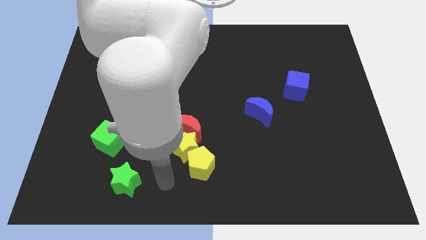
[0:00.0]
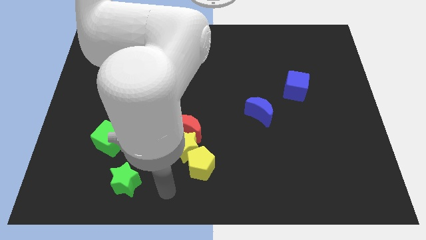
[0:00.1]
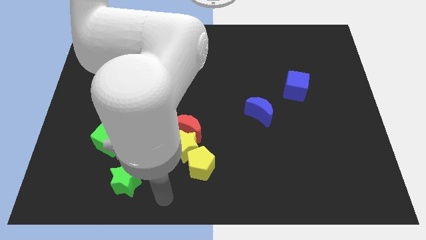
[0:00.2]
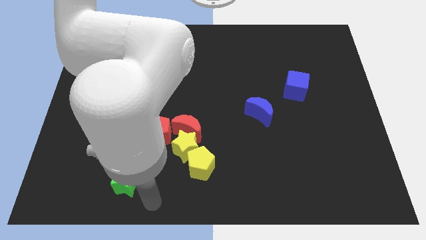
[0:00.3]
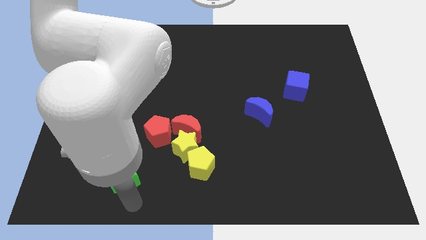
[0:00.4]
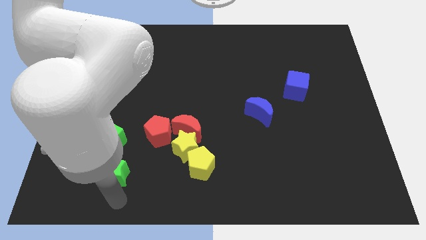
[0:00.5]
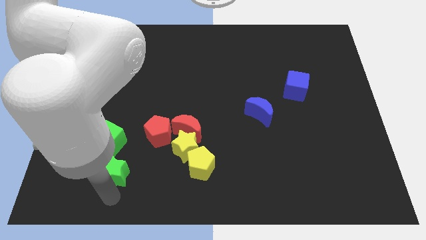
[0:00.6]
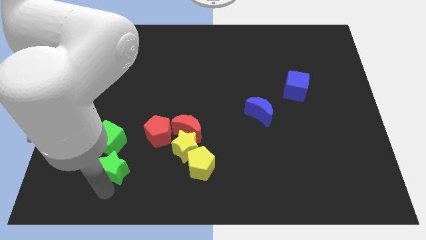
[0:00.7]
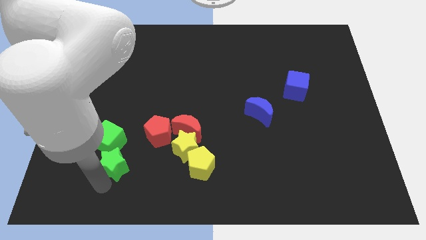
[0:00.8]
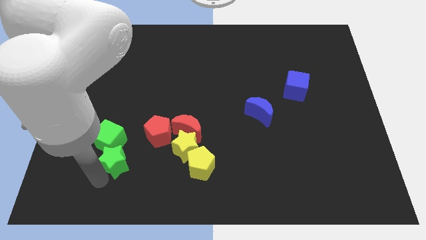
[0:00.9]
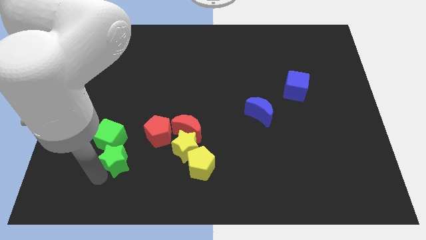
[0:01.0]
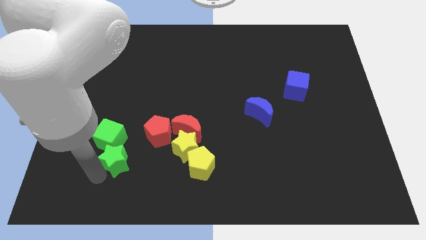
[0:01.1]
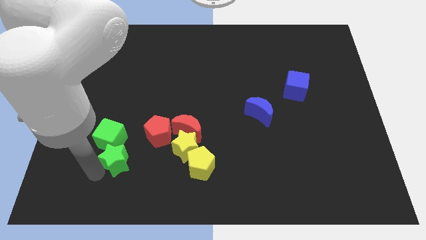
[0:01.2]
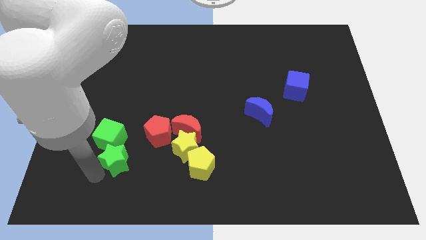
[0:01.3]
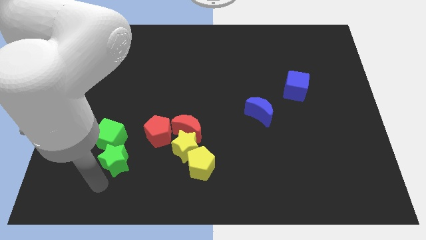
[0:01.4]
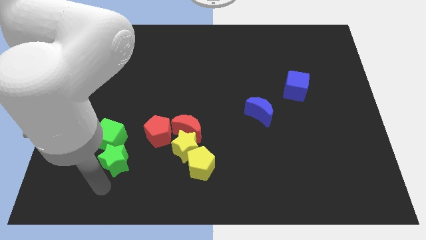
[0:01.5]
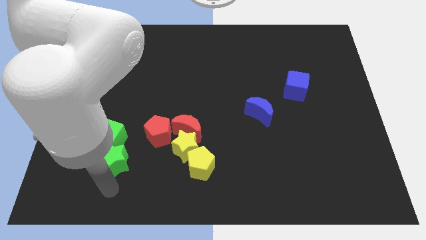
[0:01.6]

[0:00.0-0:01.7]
push the green star into the green cube

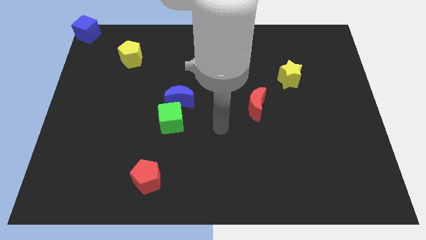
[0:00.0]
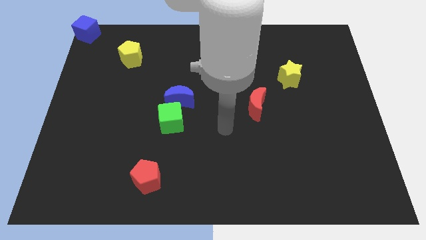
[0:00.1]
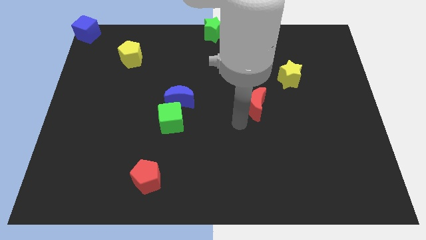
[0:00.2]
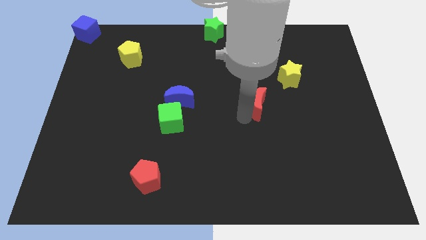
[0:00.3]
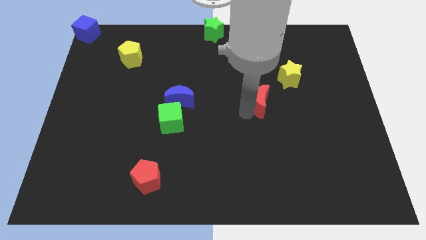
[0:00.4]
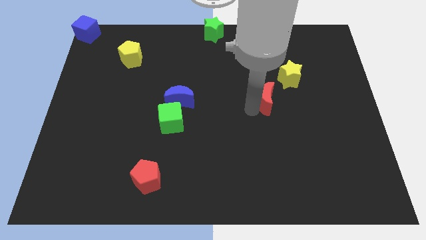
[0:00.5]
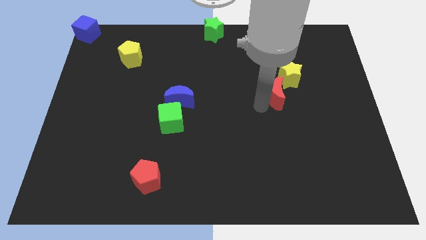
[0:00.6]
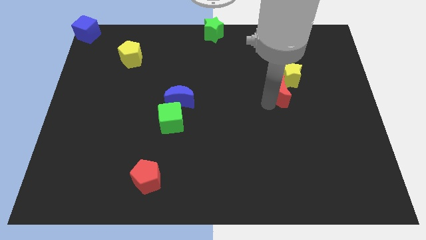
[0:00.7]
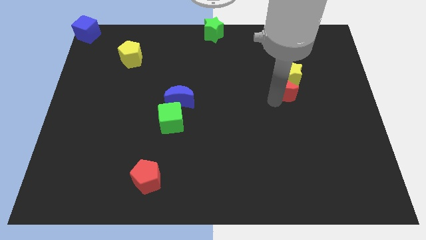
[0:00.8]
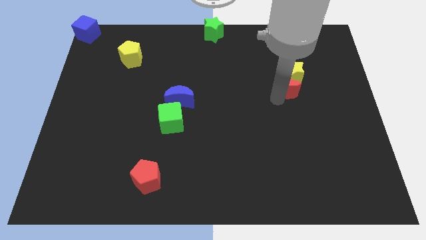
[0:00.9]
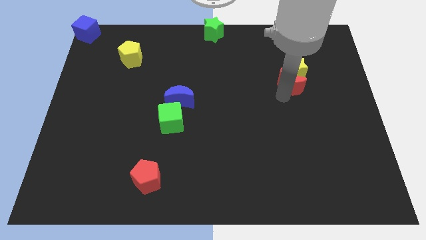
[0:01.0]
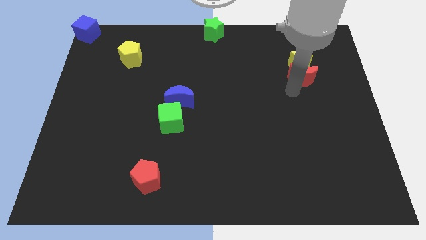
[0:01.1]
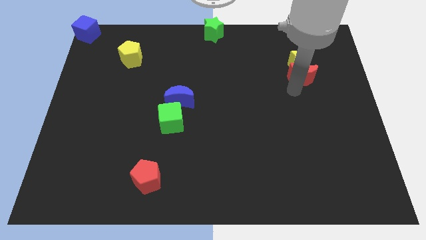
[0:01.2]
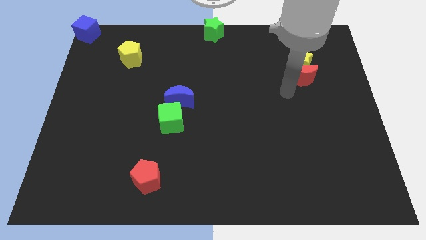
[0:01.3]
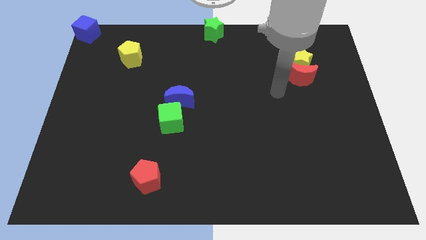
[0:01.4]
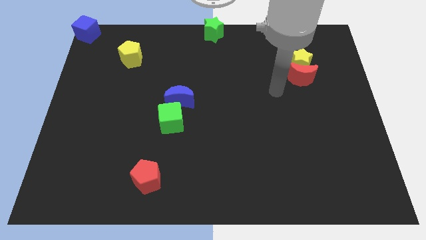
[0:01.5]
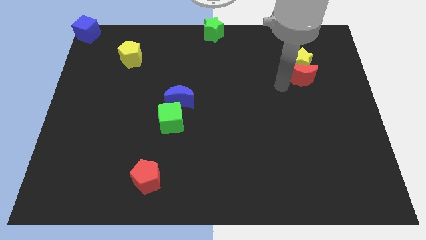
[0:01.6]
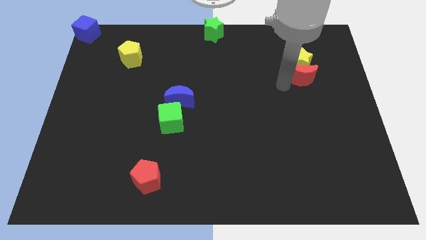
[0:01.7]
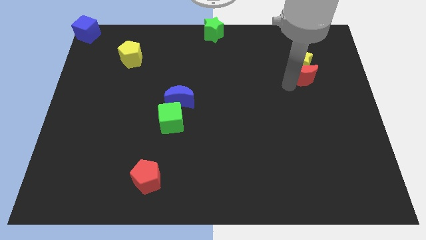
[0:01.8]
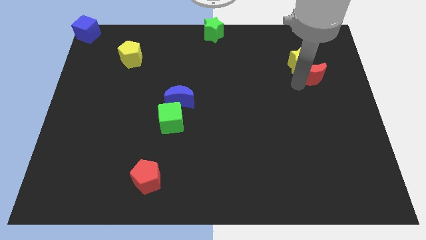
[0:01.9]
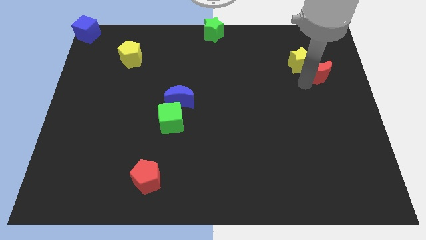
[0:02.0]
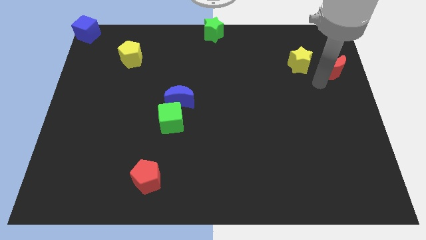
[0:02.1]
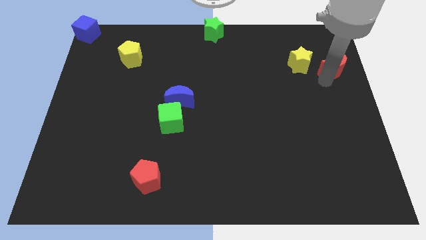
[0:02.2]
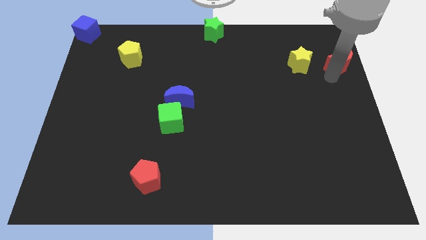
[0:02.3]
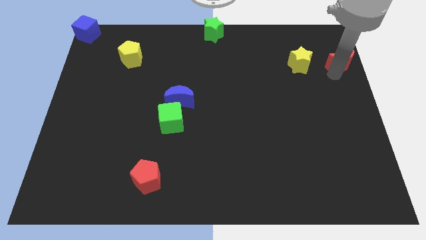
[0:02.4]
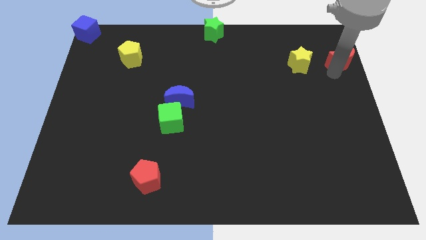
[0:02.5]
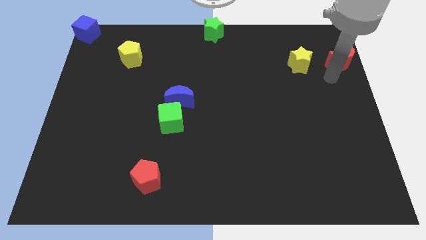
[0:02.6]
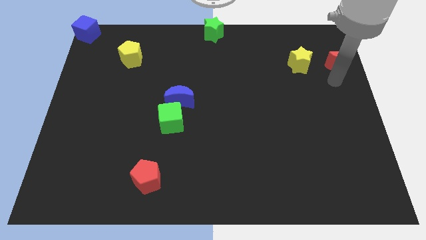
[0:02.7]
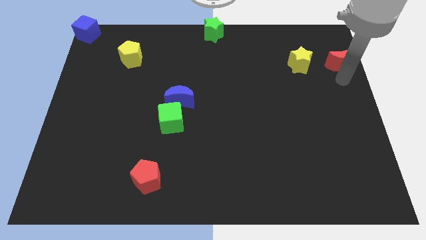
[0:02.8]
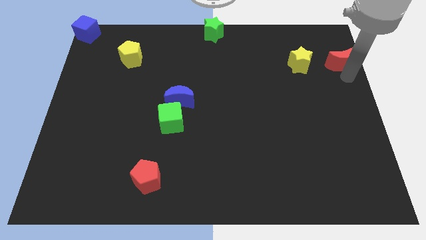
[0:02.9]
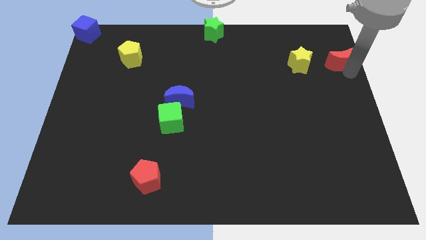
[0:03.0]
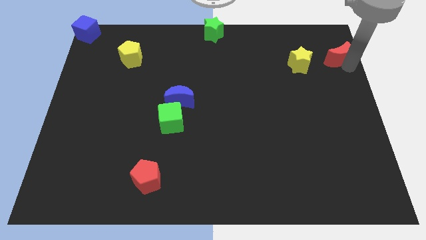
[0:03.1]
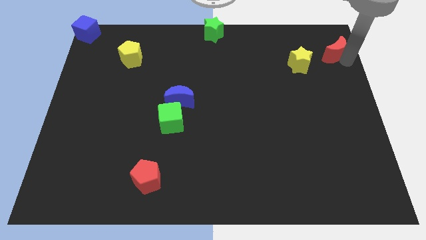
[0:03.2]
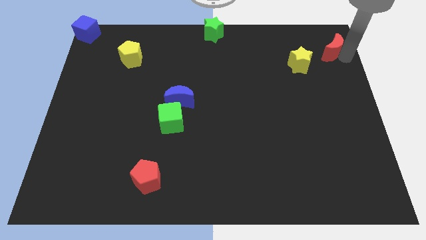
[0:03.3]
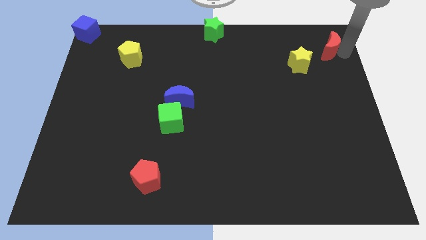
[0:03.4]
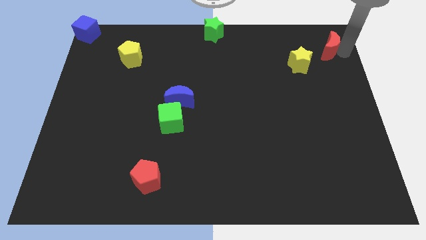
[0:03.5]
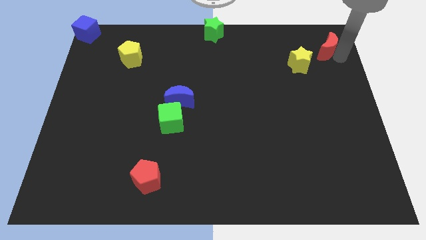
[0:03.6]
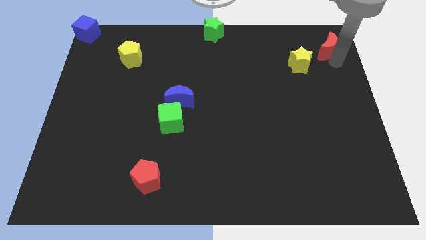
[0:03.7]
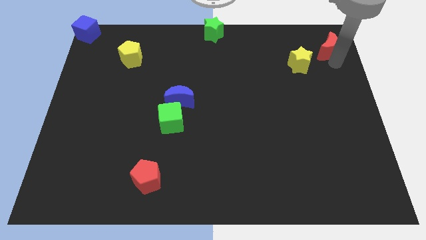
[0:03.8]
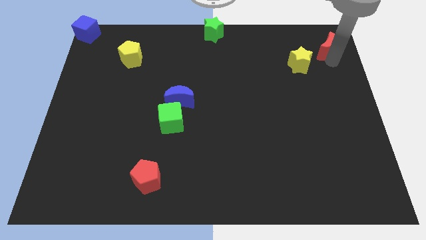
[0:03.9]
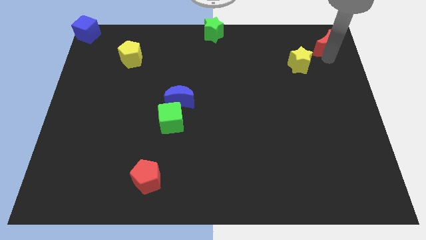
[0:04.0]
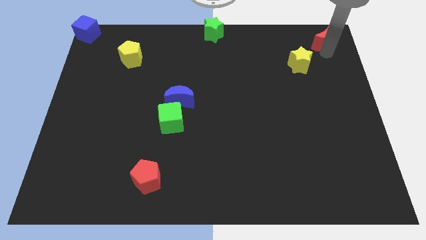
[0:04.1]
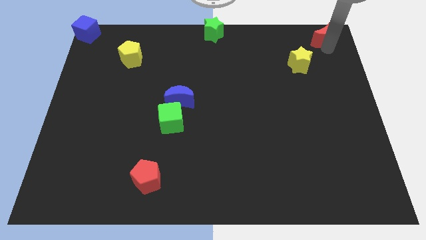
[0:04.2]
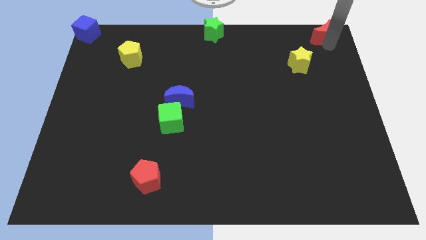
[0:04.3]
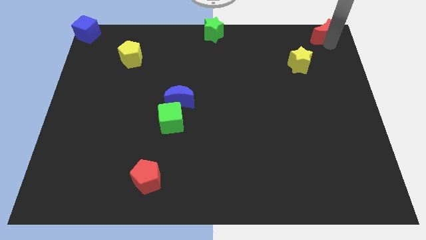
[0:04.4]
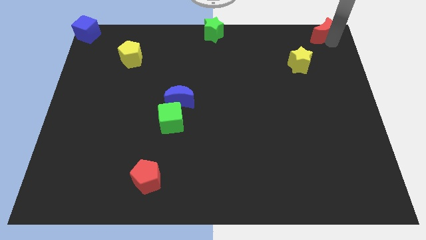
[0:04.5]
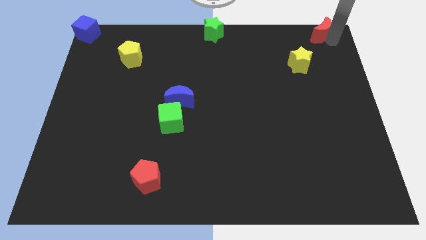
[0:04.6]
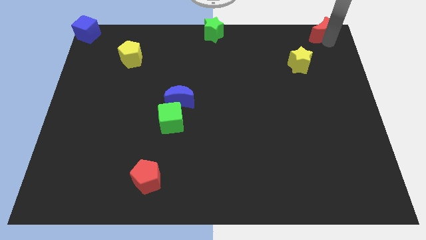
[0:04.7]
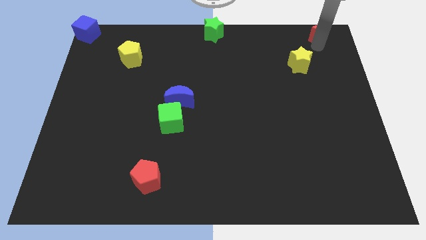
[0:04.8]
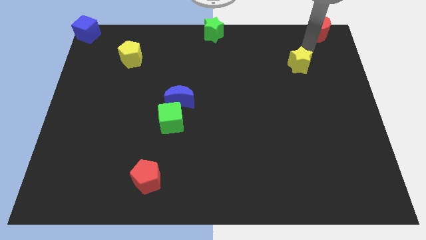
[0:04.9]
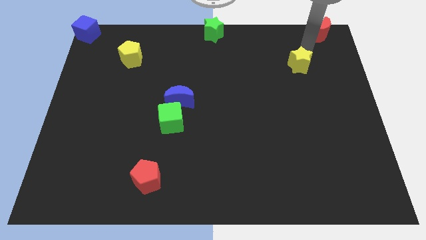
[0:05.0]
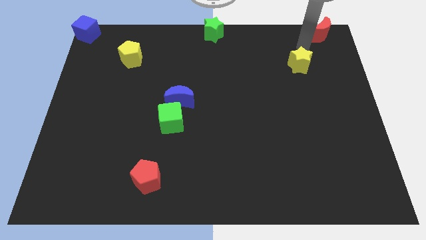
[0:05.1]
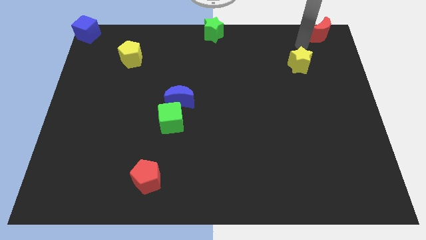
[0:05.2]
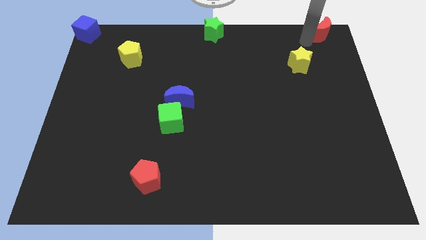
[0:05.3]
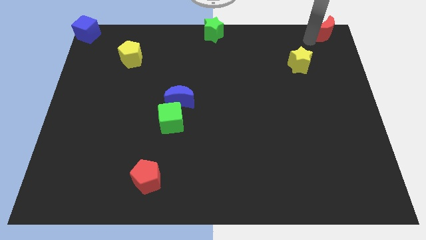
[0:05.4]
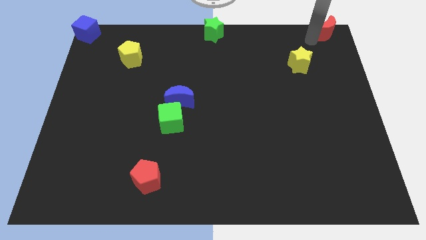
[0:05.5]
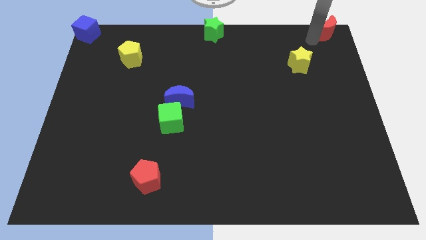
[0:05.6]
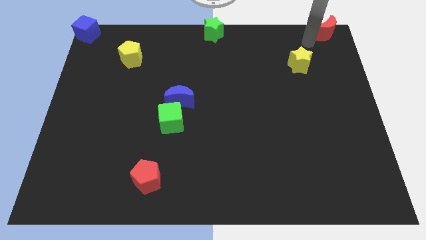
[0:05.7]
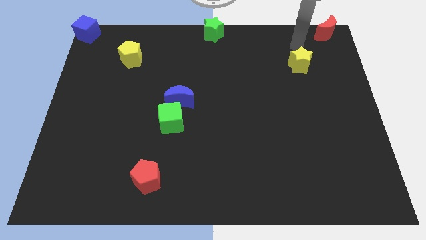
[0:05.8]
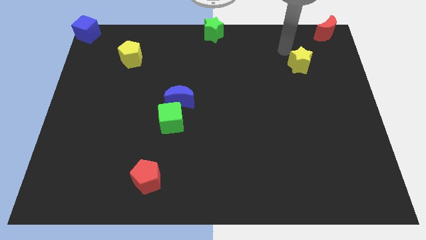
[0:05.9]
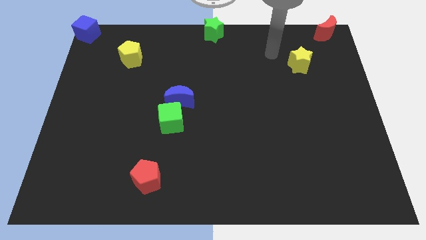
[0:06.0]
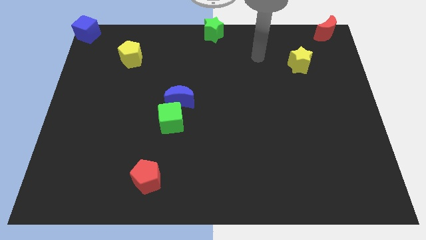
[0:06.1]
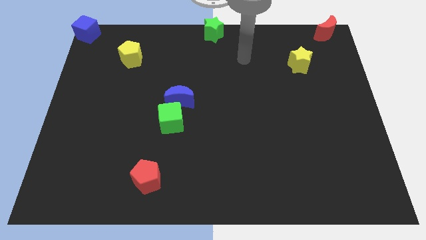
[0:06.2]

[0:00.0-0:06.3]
push the red moon diagonally on the top right side of the yellow star

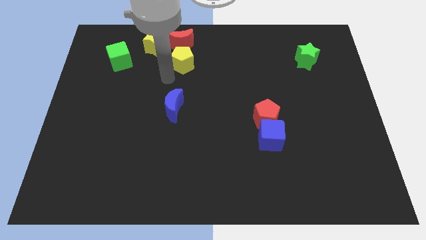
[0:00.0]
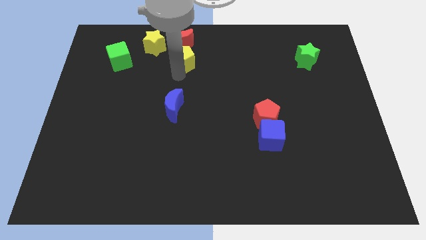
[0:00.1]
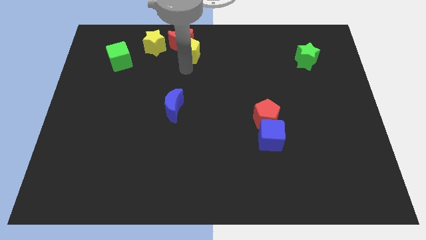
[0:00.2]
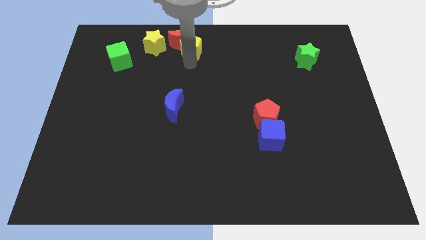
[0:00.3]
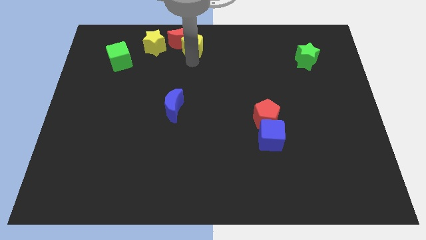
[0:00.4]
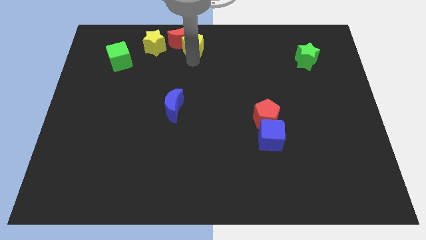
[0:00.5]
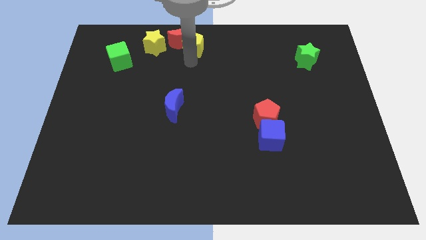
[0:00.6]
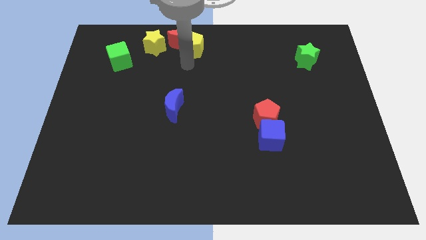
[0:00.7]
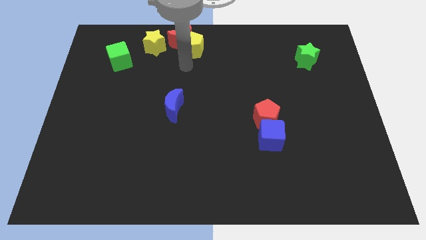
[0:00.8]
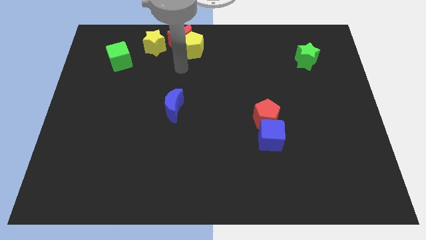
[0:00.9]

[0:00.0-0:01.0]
drag yellow pentagon slightly upside to the board
